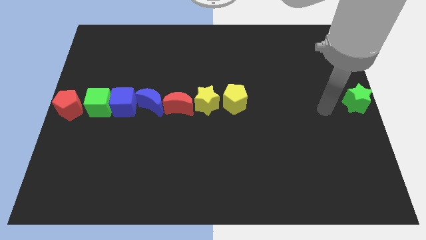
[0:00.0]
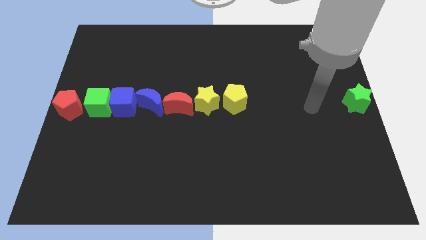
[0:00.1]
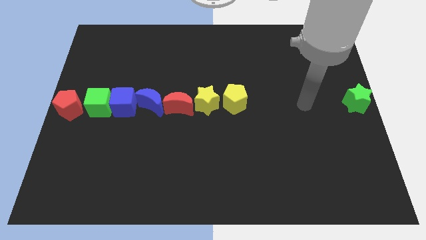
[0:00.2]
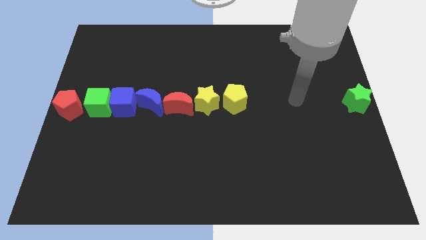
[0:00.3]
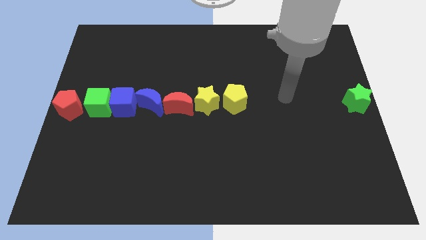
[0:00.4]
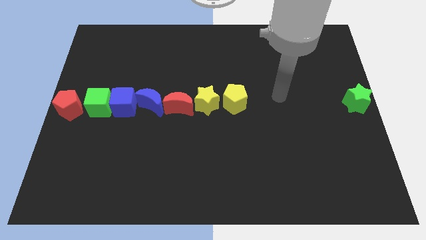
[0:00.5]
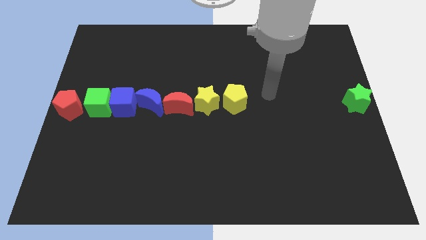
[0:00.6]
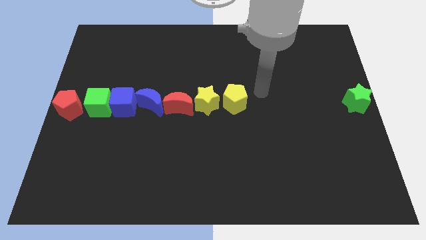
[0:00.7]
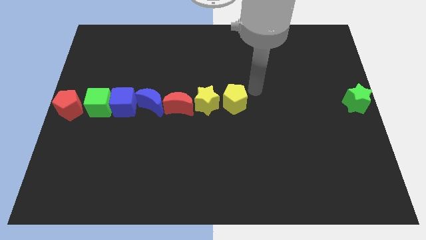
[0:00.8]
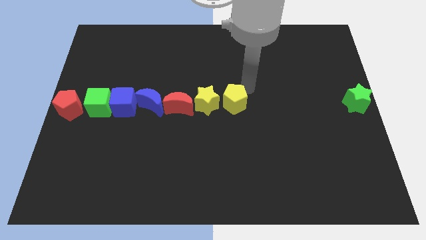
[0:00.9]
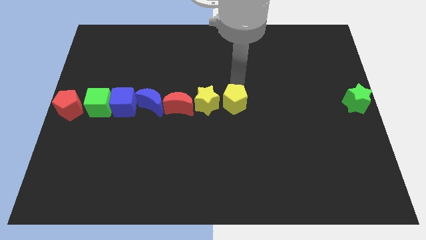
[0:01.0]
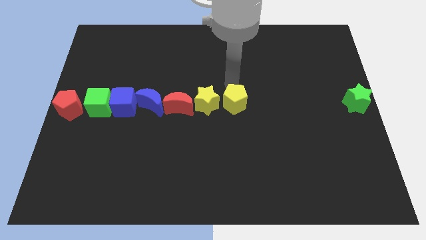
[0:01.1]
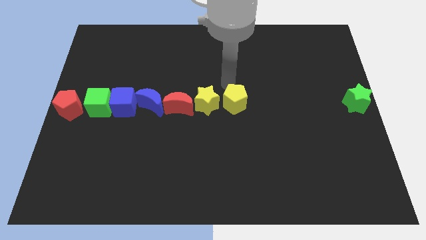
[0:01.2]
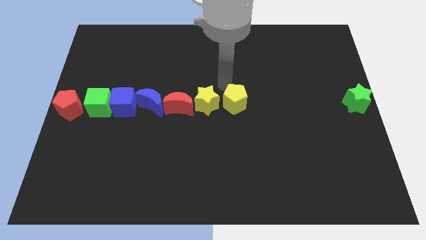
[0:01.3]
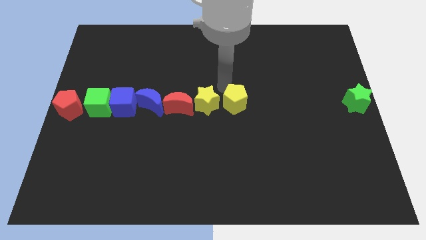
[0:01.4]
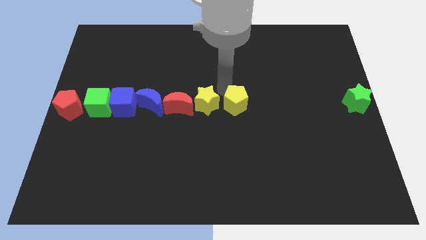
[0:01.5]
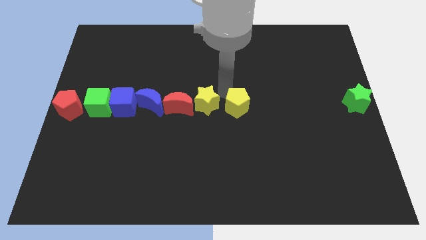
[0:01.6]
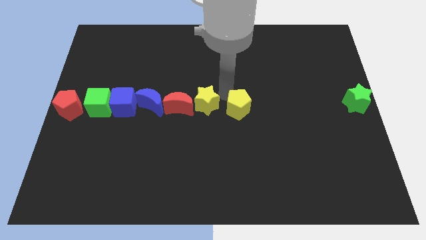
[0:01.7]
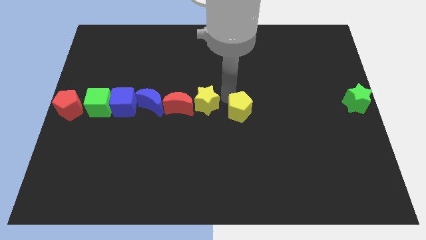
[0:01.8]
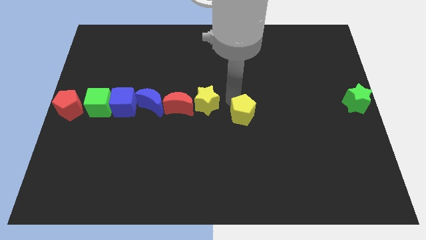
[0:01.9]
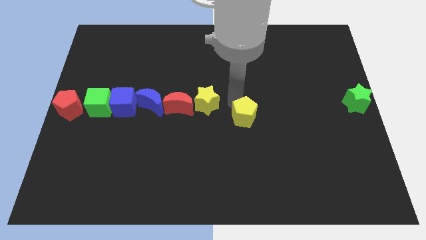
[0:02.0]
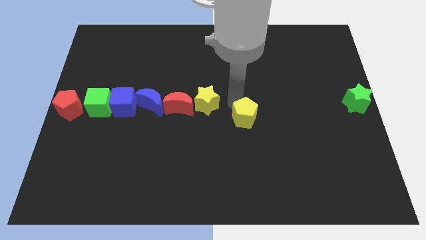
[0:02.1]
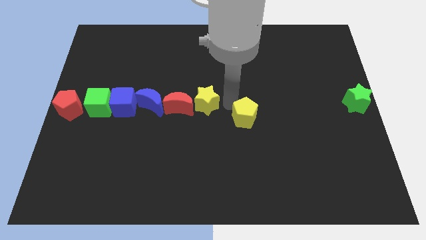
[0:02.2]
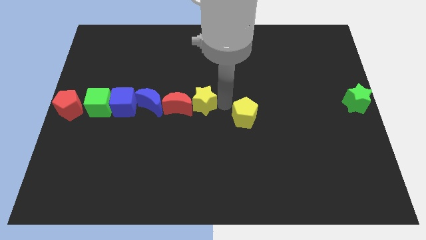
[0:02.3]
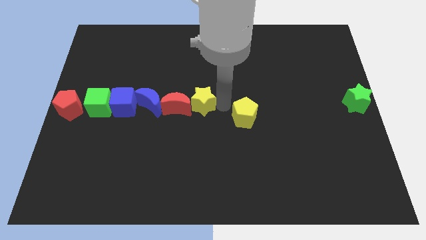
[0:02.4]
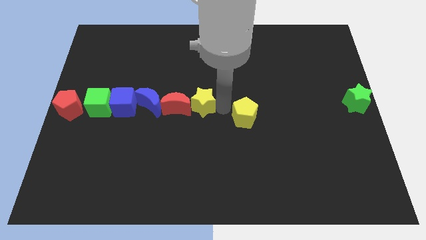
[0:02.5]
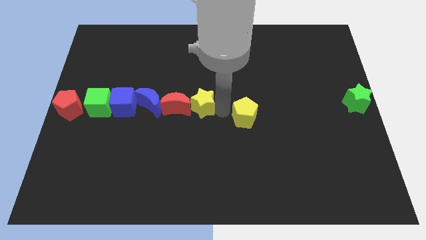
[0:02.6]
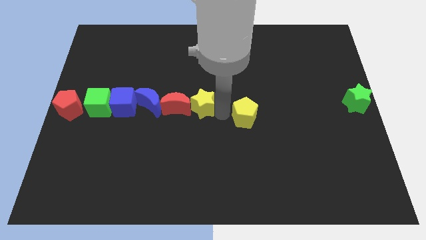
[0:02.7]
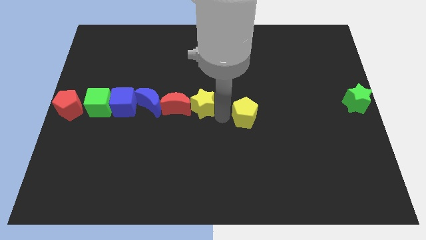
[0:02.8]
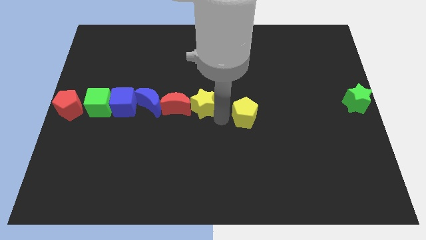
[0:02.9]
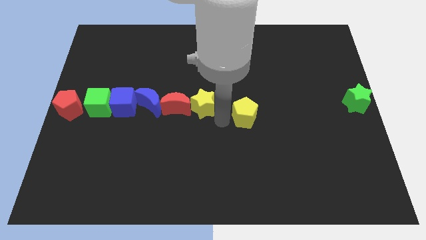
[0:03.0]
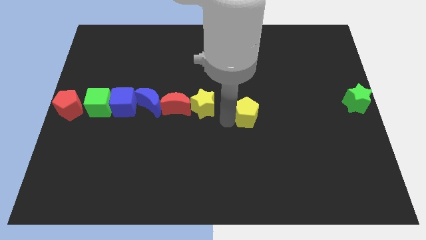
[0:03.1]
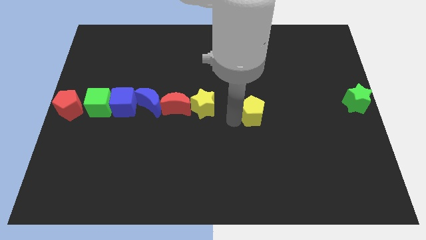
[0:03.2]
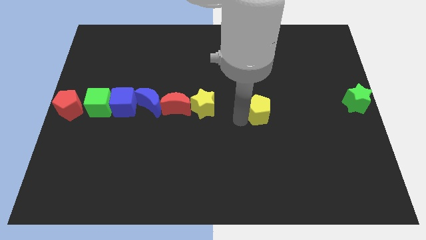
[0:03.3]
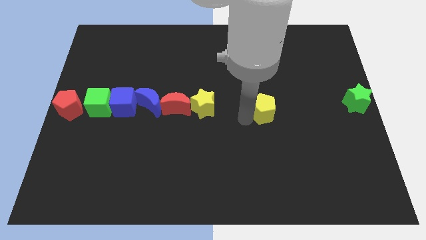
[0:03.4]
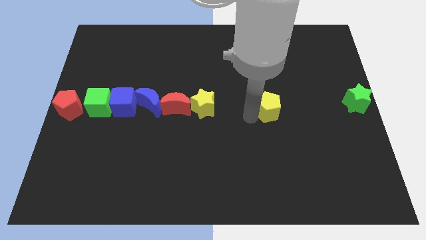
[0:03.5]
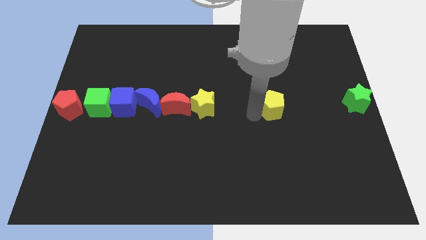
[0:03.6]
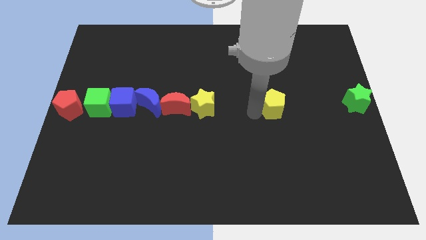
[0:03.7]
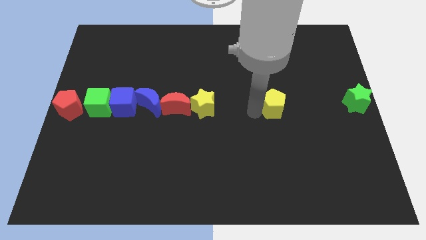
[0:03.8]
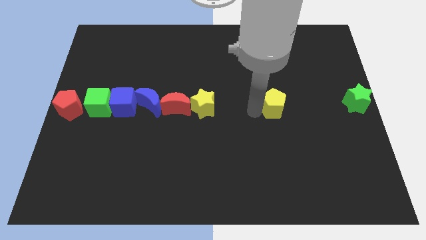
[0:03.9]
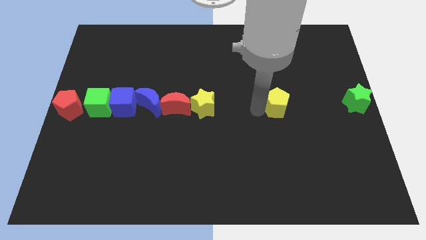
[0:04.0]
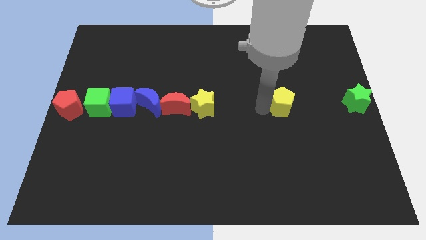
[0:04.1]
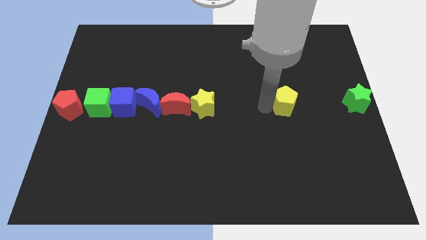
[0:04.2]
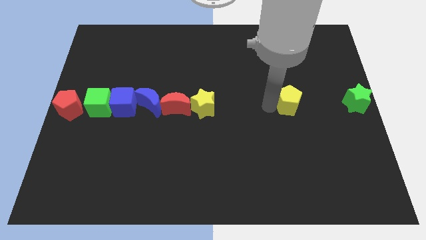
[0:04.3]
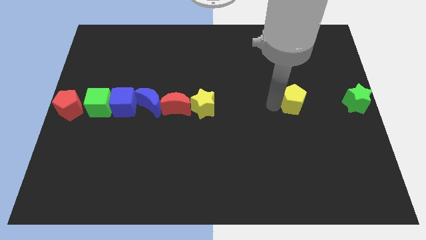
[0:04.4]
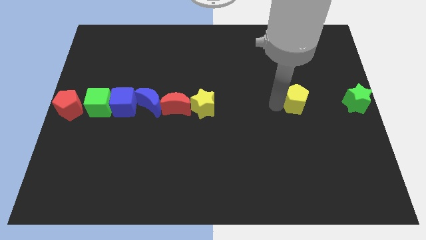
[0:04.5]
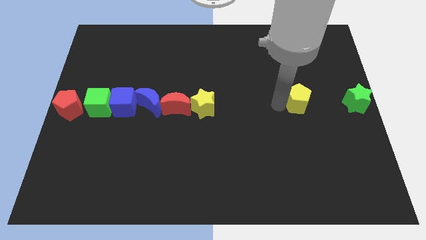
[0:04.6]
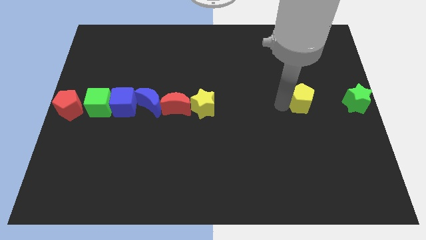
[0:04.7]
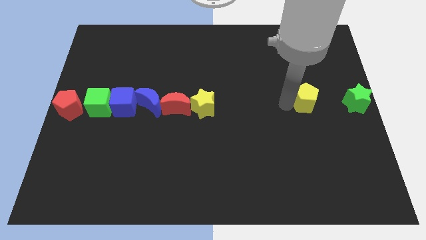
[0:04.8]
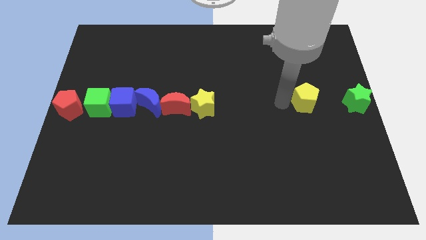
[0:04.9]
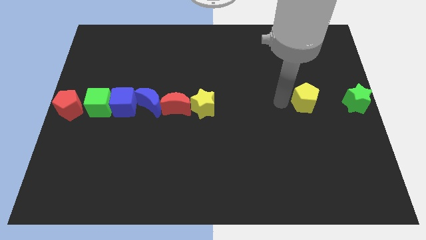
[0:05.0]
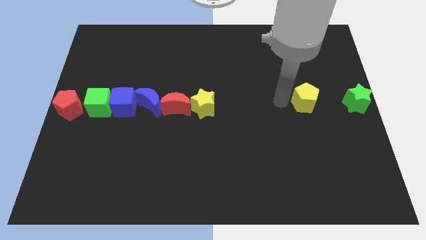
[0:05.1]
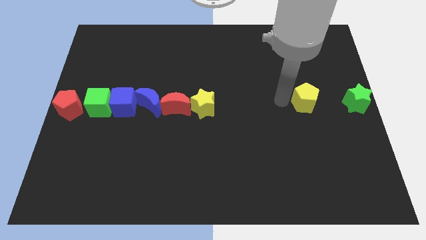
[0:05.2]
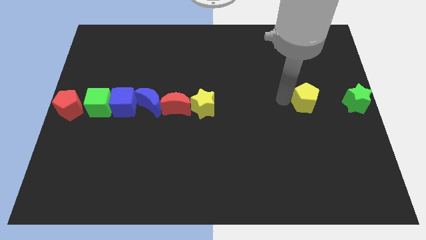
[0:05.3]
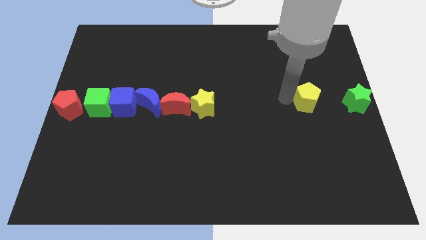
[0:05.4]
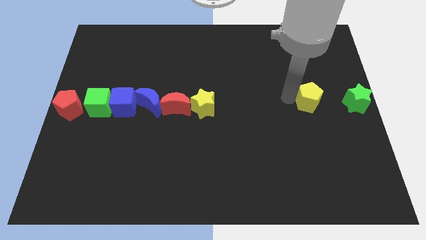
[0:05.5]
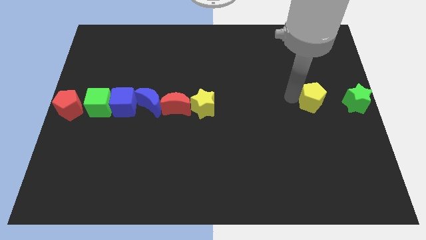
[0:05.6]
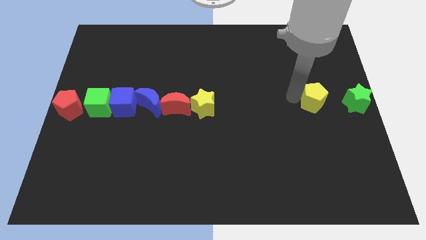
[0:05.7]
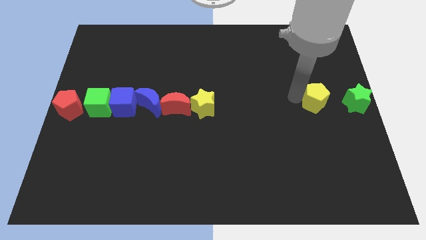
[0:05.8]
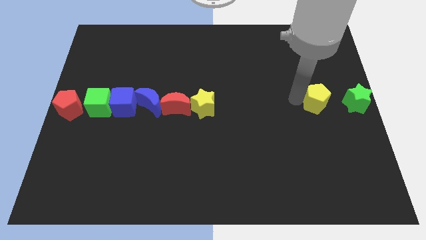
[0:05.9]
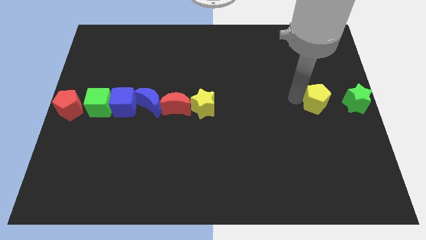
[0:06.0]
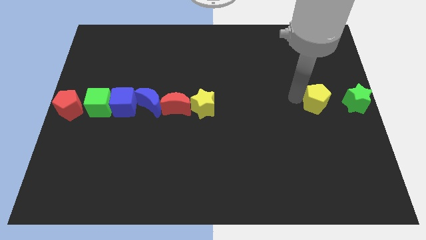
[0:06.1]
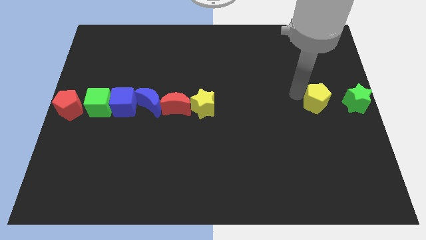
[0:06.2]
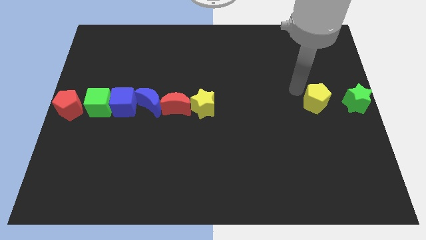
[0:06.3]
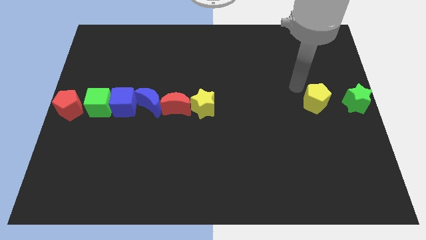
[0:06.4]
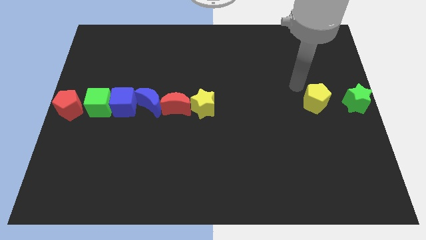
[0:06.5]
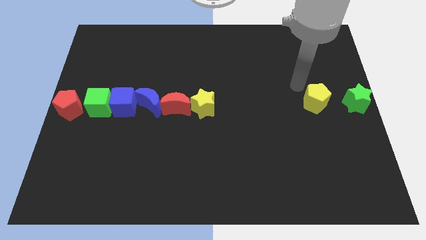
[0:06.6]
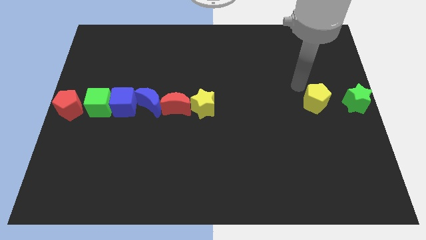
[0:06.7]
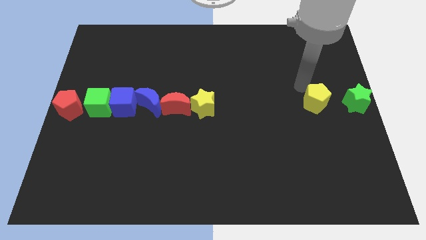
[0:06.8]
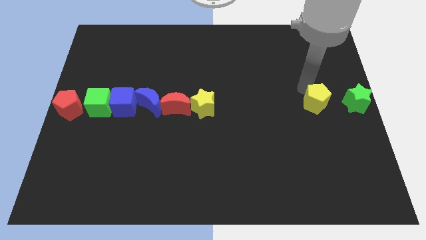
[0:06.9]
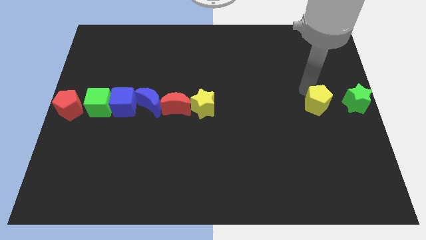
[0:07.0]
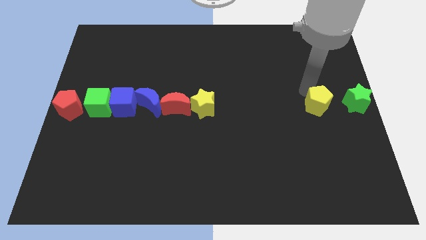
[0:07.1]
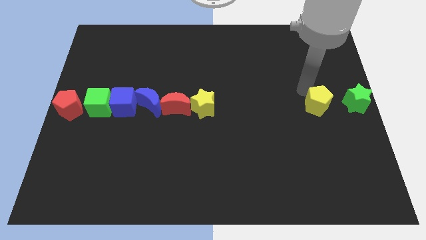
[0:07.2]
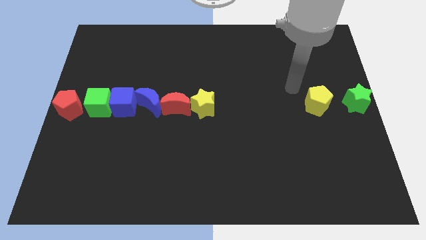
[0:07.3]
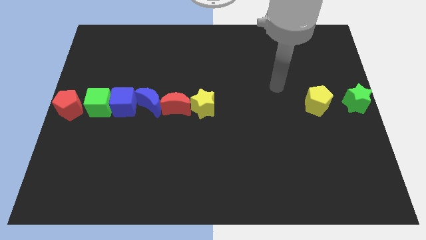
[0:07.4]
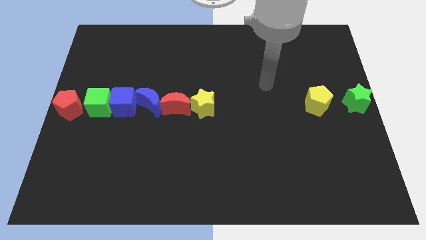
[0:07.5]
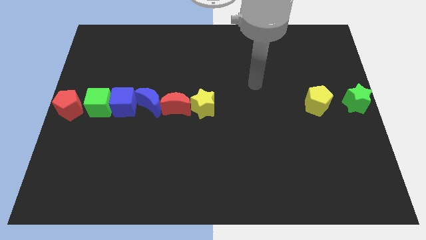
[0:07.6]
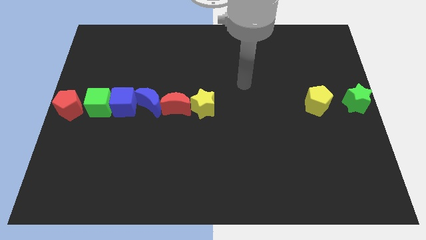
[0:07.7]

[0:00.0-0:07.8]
place the yellow pentagon to the left of the green star

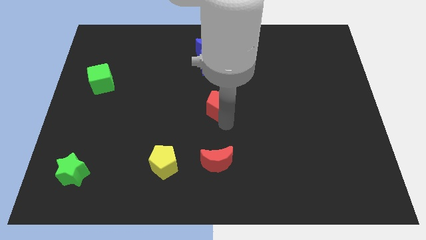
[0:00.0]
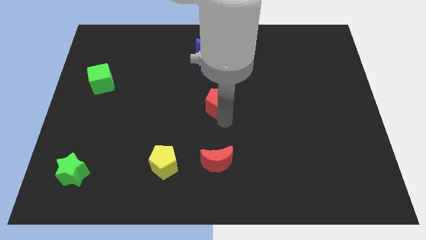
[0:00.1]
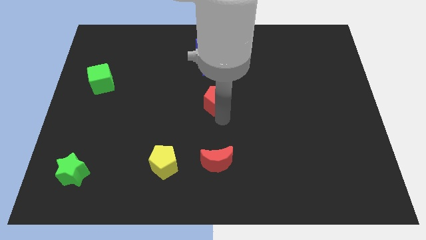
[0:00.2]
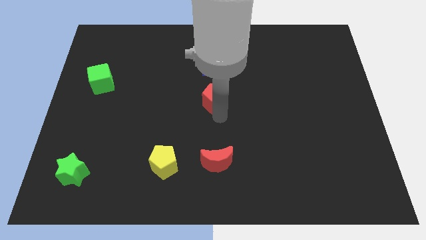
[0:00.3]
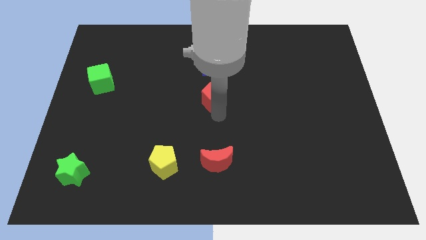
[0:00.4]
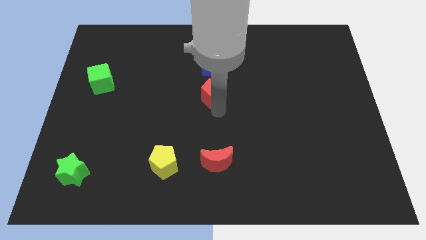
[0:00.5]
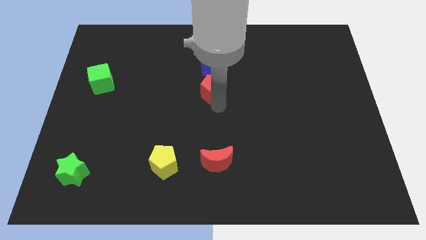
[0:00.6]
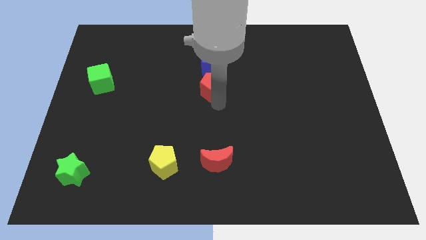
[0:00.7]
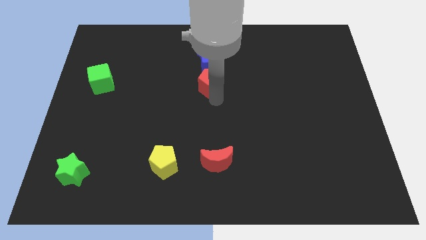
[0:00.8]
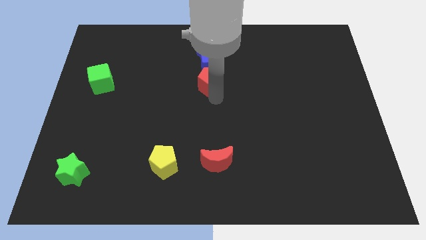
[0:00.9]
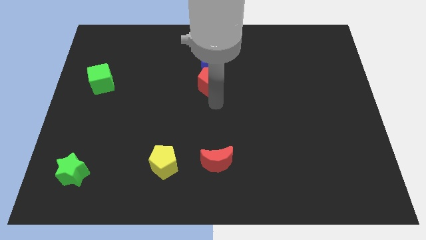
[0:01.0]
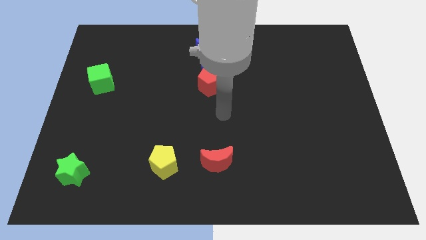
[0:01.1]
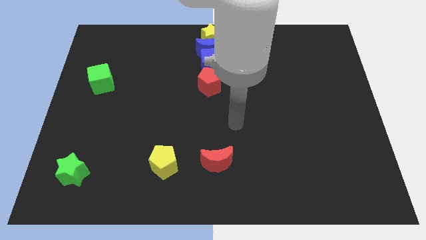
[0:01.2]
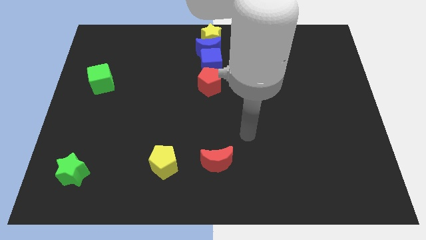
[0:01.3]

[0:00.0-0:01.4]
place the red pentagon below the blue cube
